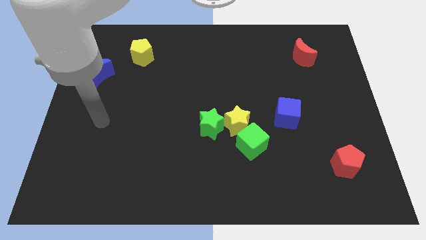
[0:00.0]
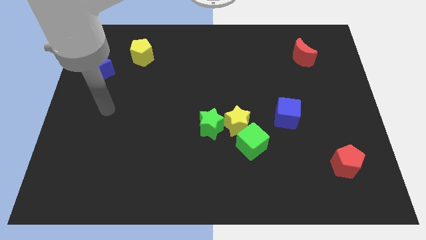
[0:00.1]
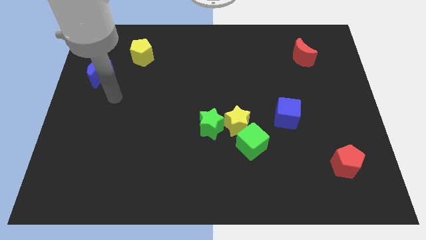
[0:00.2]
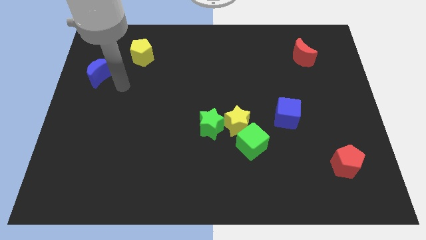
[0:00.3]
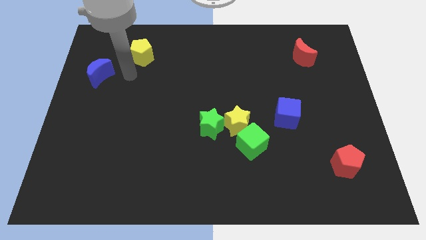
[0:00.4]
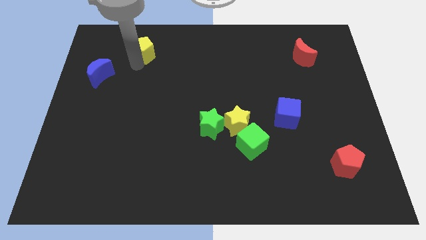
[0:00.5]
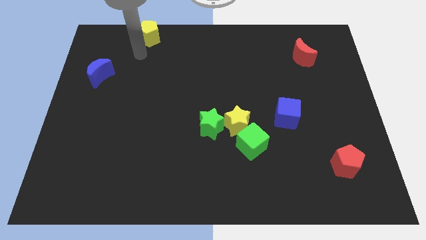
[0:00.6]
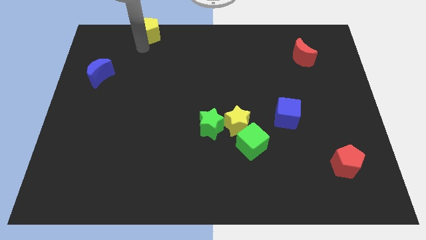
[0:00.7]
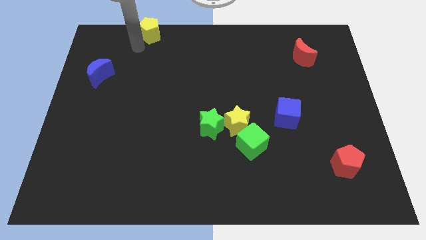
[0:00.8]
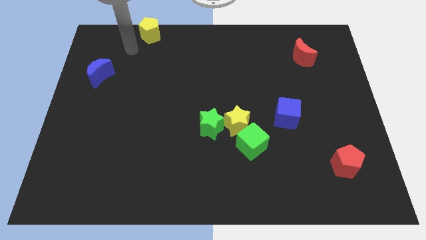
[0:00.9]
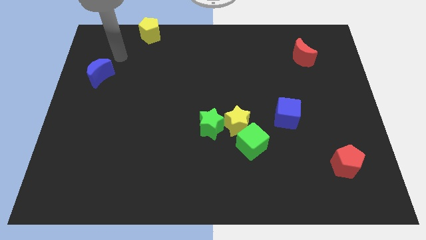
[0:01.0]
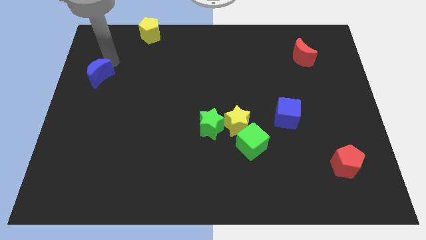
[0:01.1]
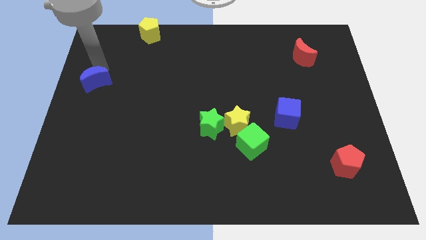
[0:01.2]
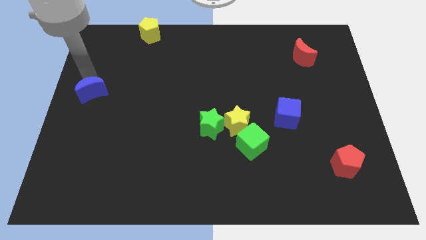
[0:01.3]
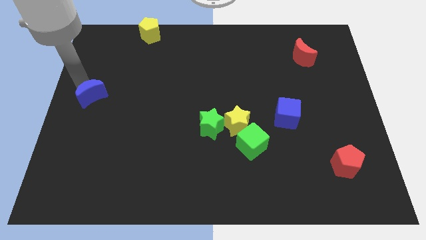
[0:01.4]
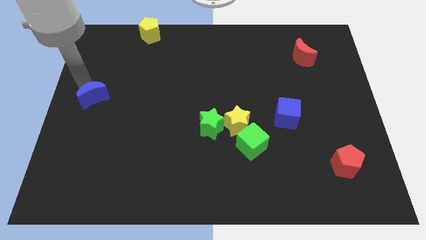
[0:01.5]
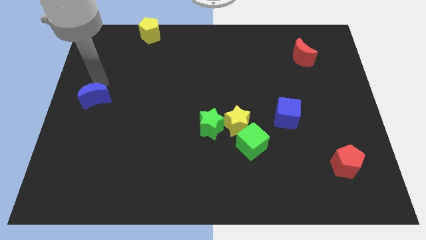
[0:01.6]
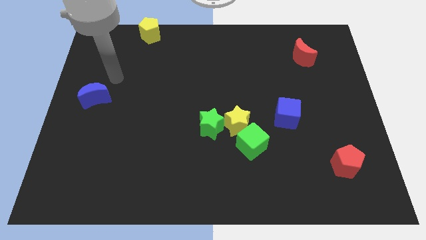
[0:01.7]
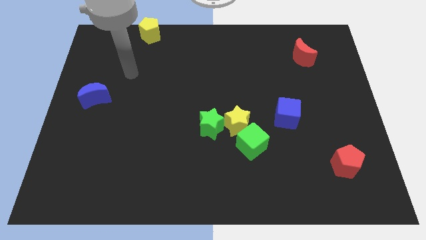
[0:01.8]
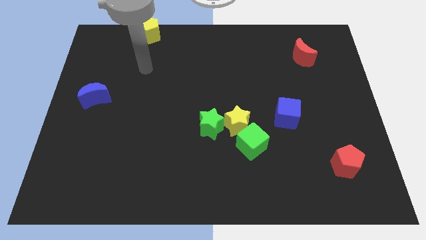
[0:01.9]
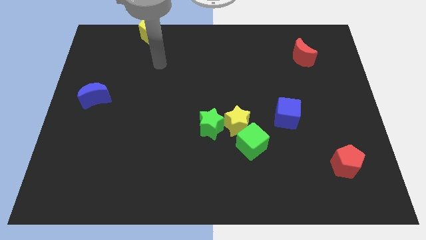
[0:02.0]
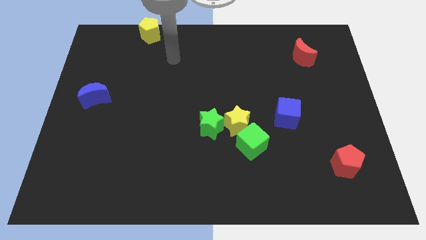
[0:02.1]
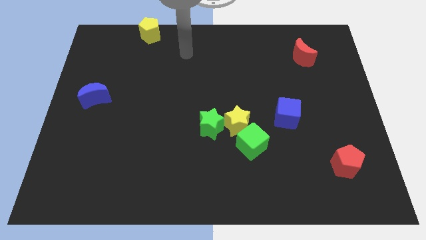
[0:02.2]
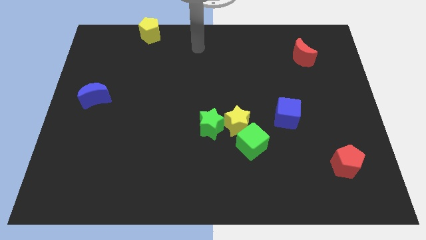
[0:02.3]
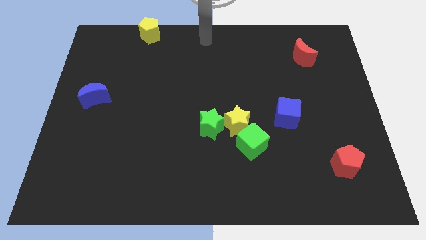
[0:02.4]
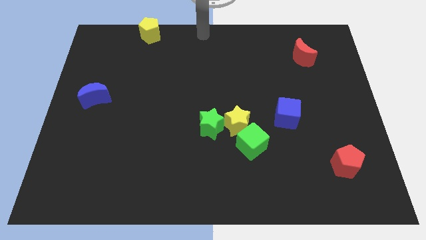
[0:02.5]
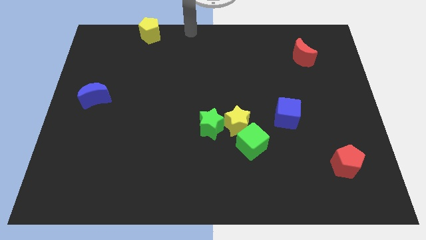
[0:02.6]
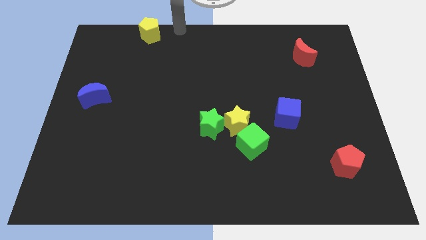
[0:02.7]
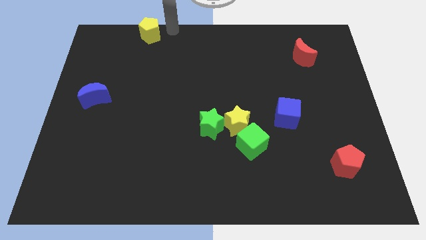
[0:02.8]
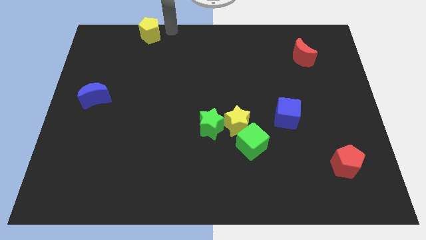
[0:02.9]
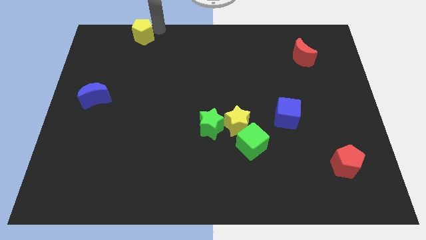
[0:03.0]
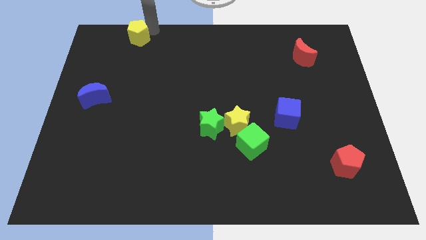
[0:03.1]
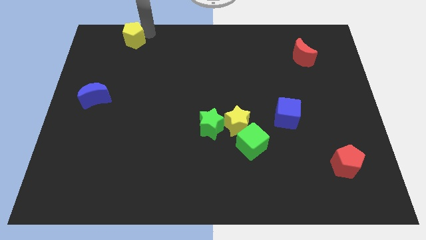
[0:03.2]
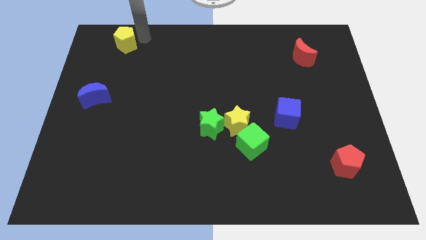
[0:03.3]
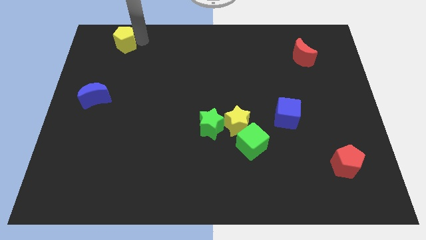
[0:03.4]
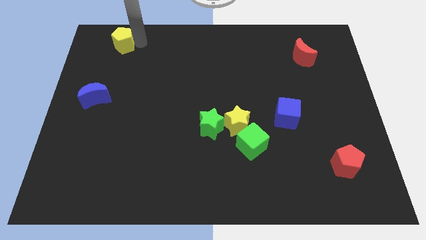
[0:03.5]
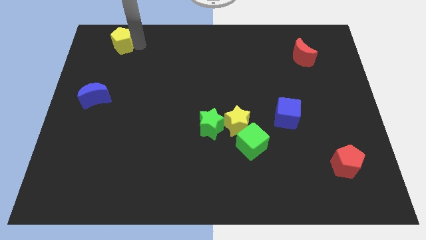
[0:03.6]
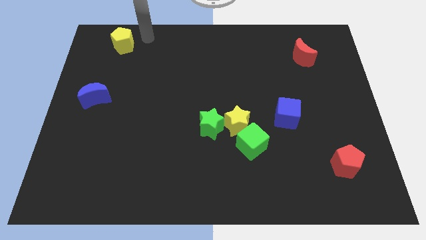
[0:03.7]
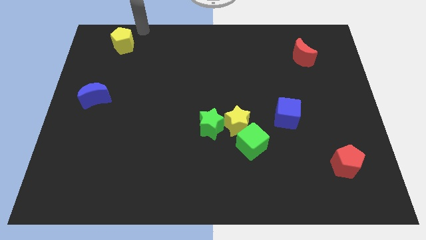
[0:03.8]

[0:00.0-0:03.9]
place the yellow pentagon and blue crescent in a vertical line at the left side of the board

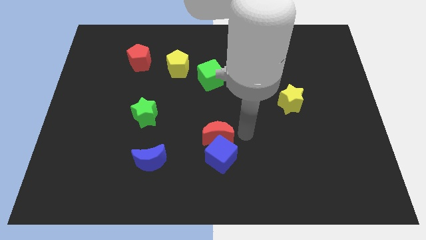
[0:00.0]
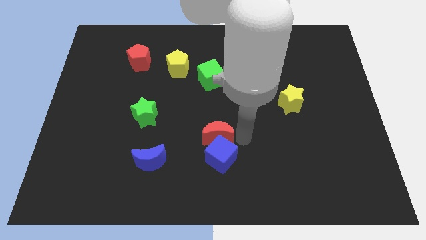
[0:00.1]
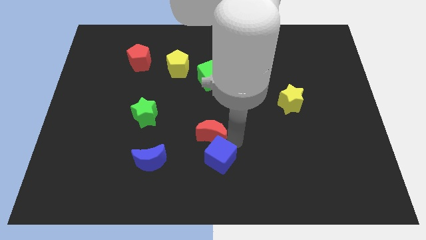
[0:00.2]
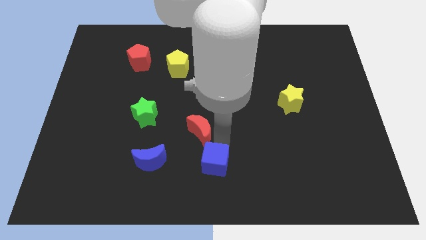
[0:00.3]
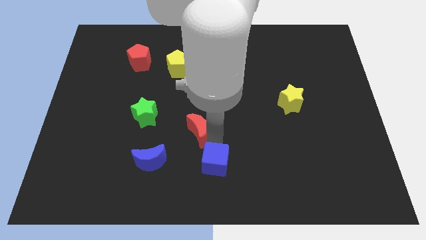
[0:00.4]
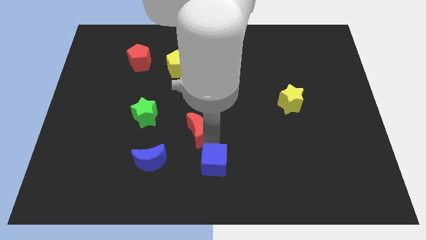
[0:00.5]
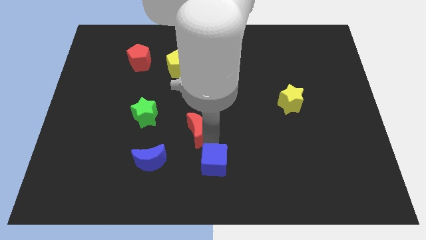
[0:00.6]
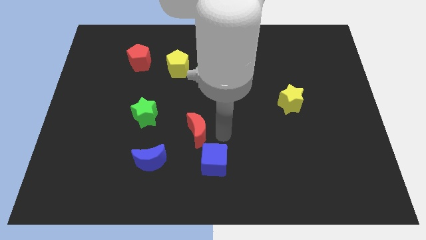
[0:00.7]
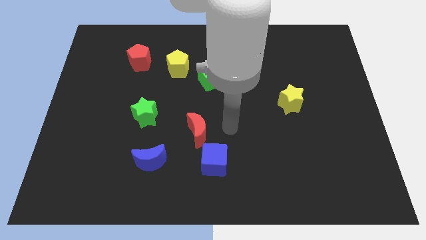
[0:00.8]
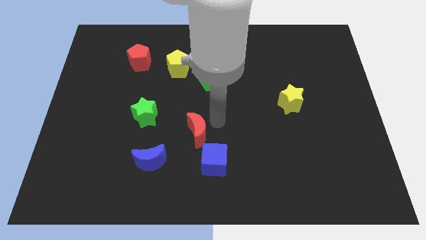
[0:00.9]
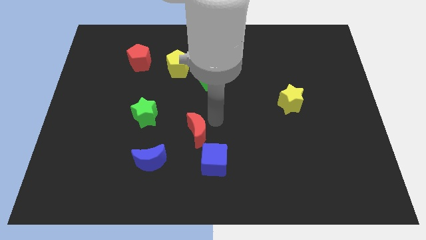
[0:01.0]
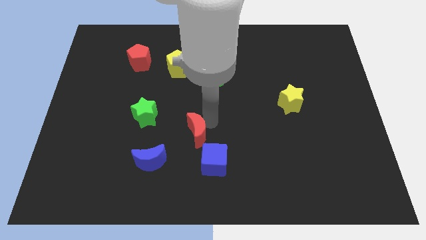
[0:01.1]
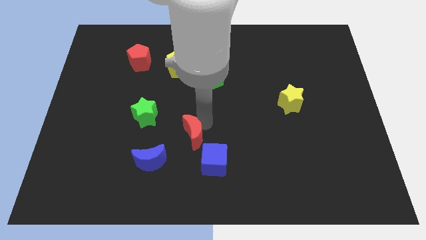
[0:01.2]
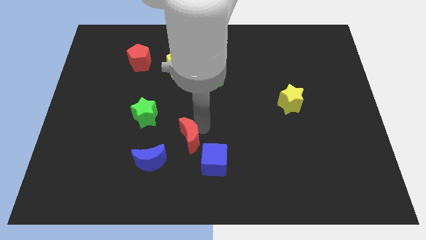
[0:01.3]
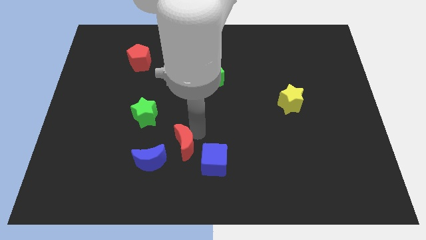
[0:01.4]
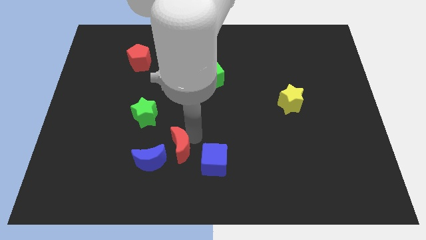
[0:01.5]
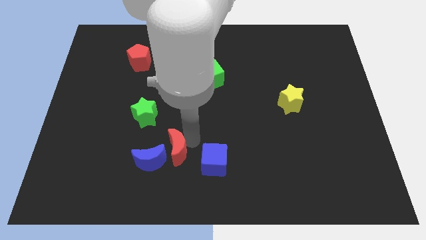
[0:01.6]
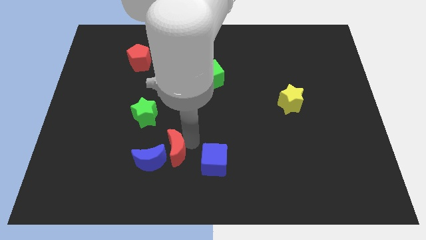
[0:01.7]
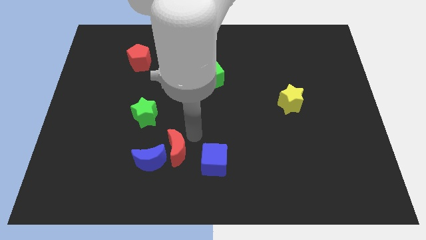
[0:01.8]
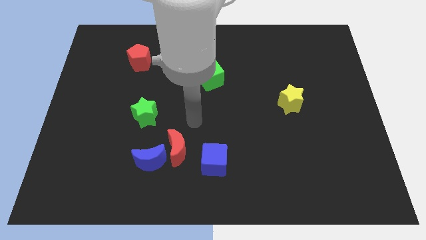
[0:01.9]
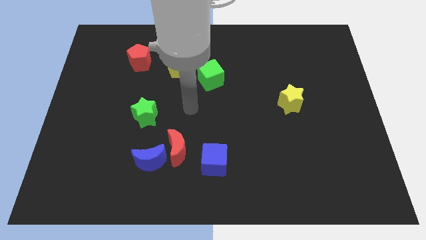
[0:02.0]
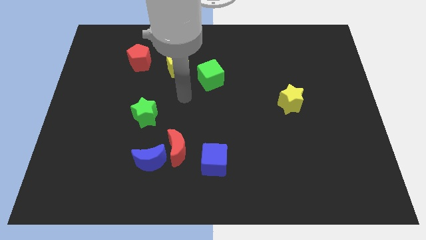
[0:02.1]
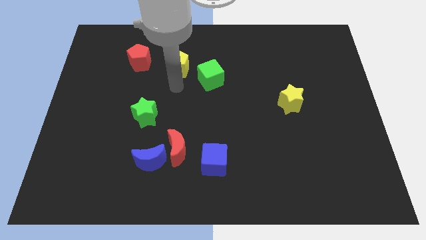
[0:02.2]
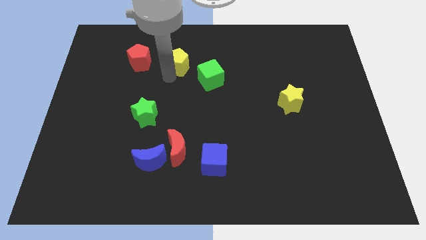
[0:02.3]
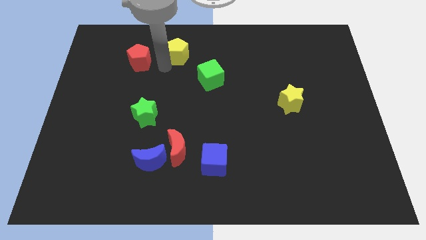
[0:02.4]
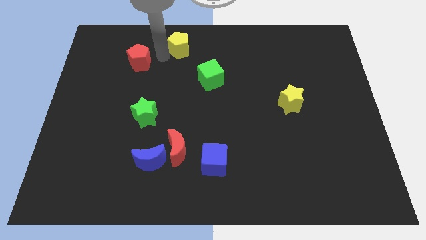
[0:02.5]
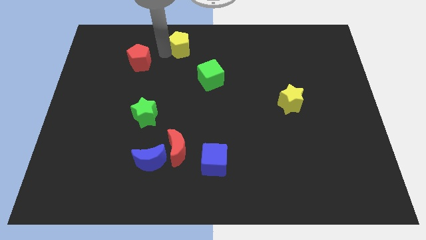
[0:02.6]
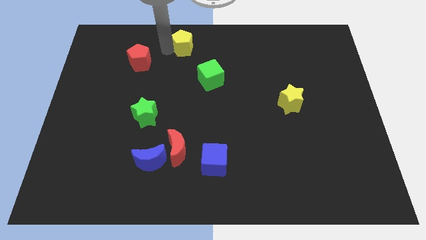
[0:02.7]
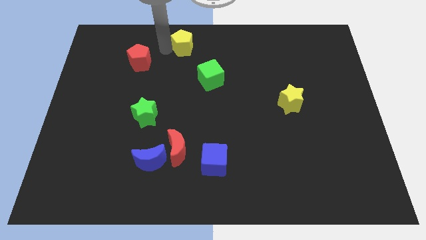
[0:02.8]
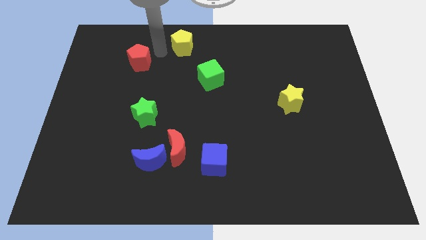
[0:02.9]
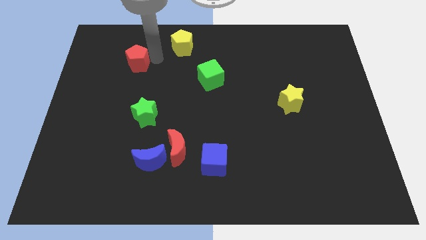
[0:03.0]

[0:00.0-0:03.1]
push yellow pentagon slightly towards up

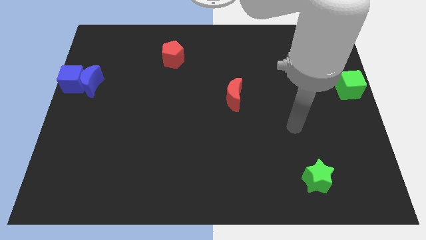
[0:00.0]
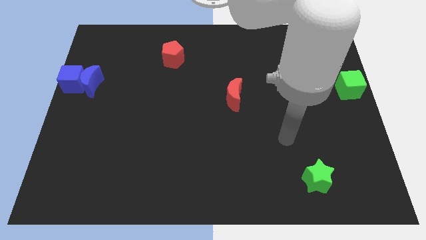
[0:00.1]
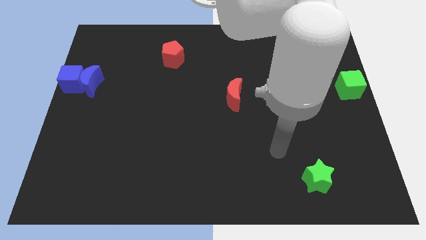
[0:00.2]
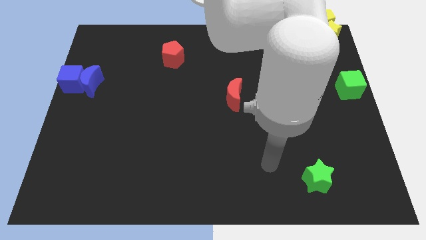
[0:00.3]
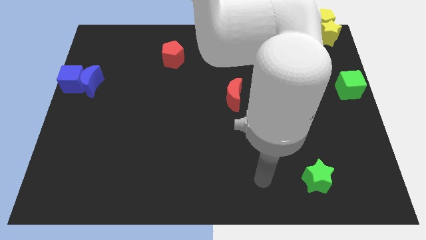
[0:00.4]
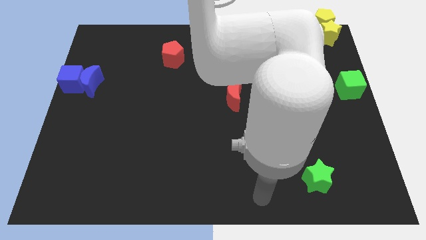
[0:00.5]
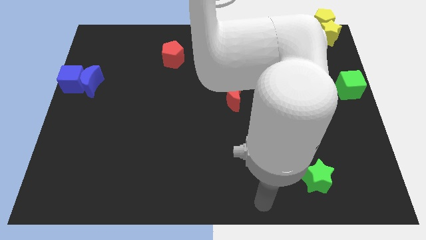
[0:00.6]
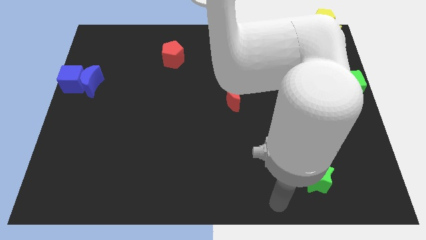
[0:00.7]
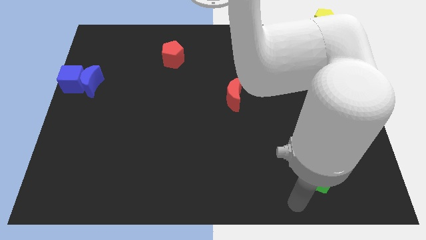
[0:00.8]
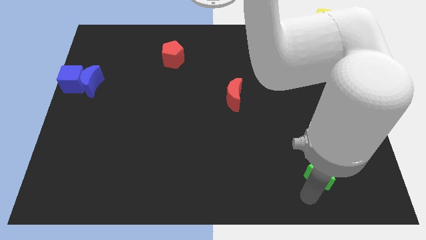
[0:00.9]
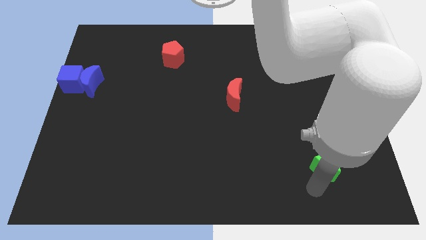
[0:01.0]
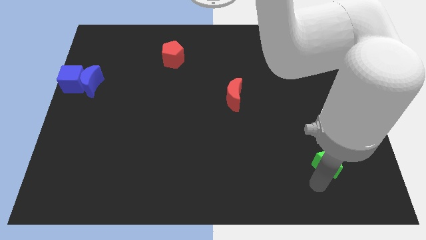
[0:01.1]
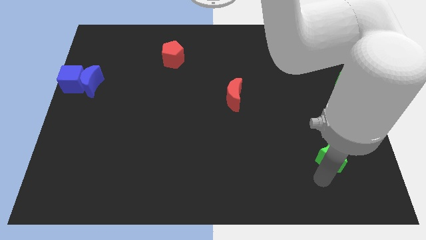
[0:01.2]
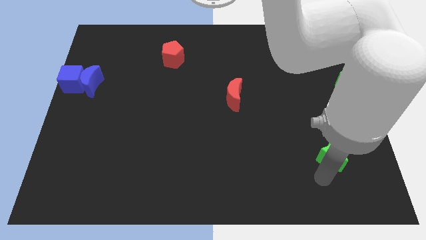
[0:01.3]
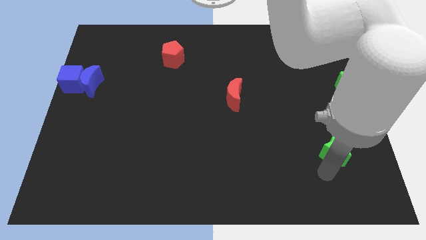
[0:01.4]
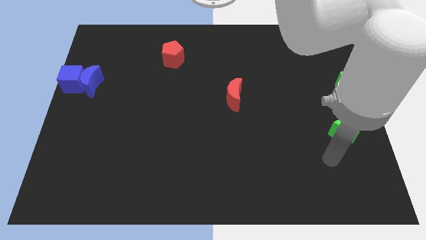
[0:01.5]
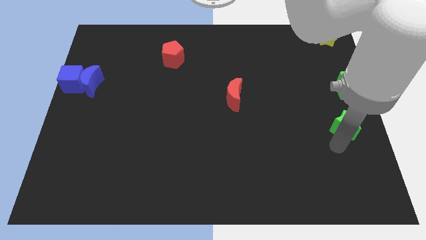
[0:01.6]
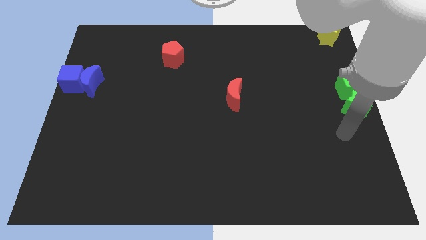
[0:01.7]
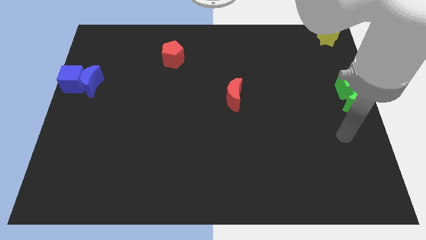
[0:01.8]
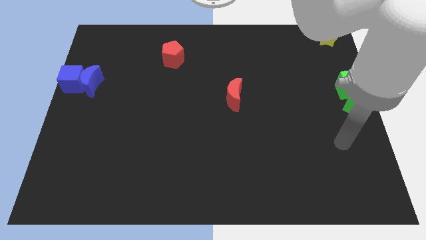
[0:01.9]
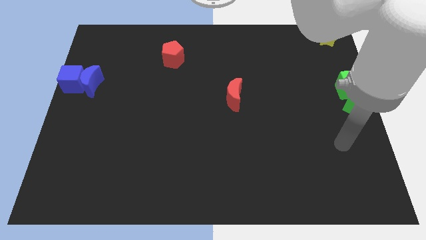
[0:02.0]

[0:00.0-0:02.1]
move the green star into the green cube

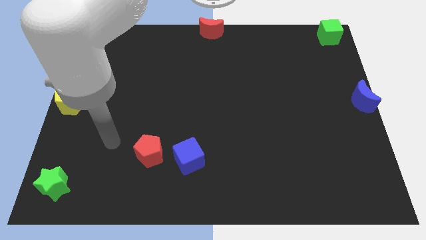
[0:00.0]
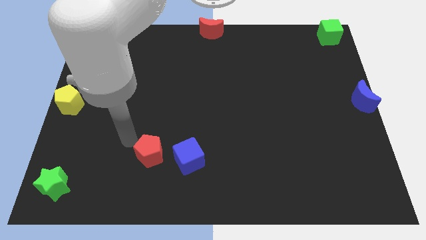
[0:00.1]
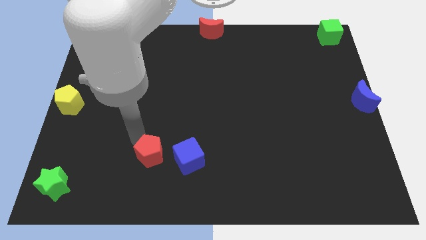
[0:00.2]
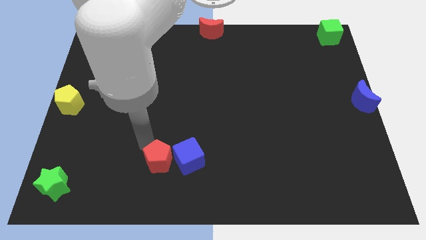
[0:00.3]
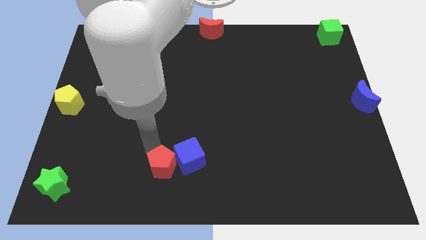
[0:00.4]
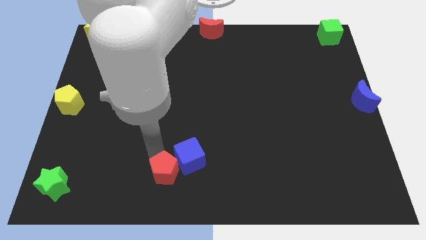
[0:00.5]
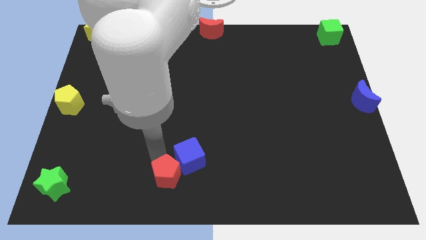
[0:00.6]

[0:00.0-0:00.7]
push the red pentagon into the blue cube
